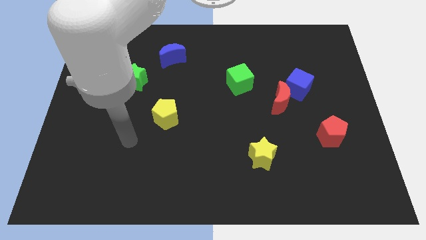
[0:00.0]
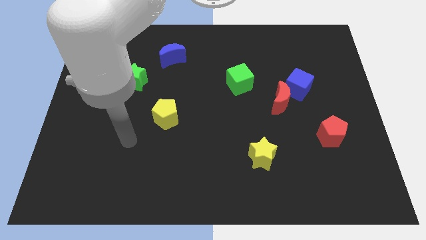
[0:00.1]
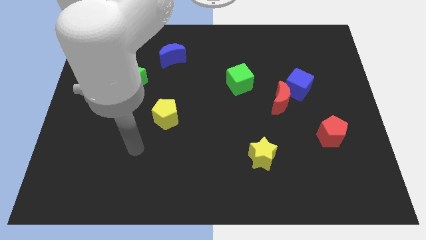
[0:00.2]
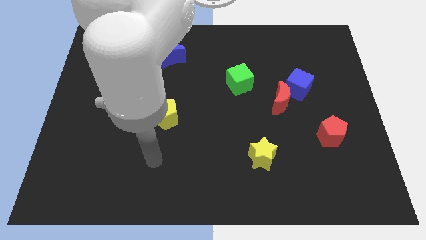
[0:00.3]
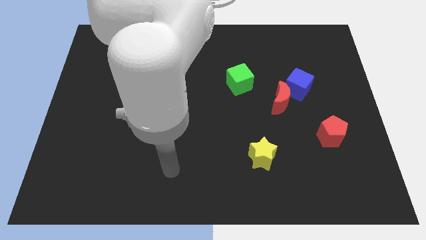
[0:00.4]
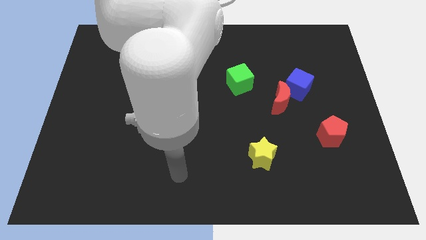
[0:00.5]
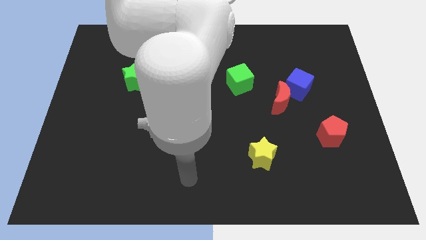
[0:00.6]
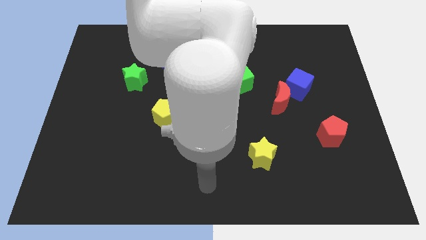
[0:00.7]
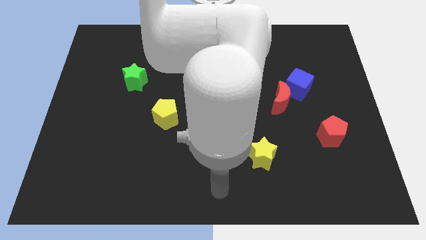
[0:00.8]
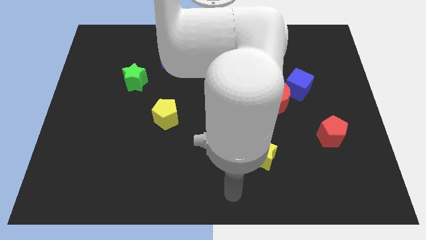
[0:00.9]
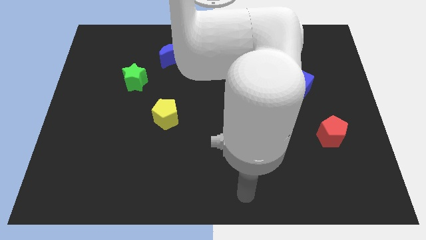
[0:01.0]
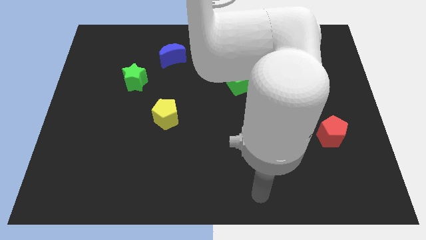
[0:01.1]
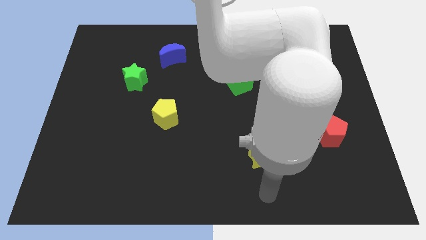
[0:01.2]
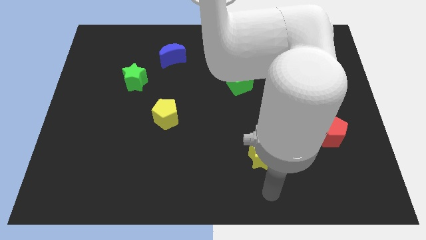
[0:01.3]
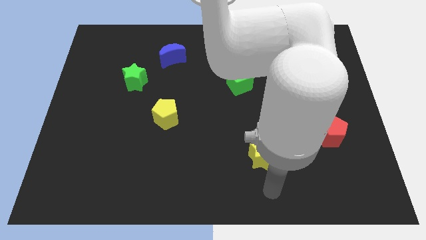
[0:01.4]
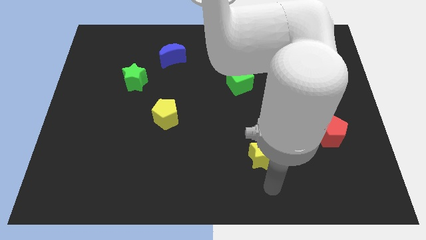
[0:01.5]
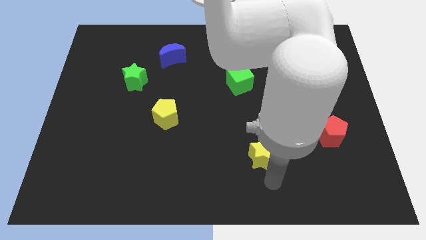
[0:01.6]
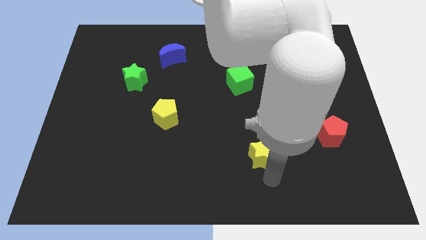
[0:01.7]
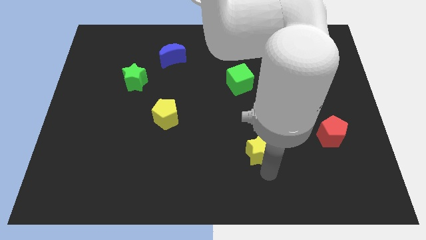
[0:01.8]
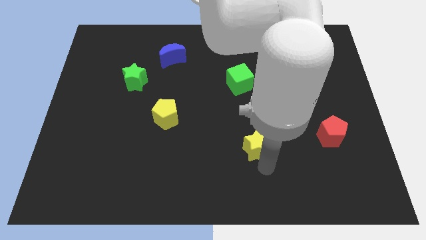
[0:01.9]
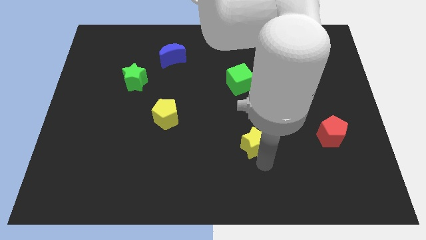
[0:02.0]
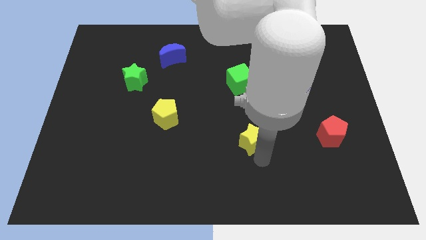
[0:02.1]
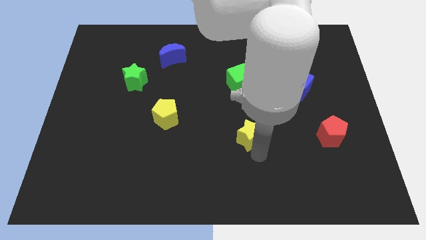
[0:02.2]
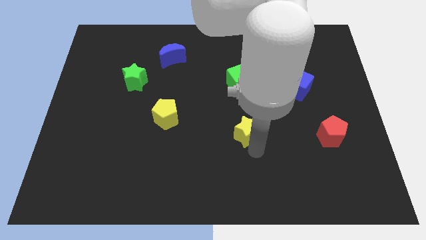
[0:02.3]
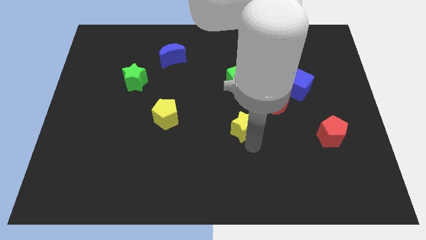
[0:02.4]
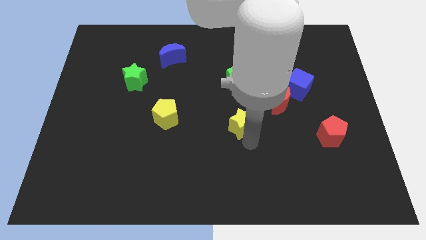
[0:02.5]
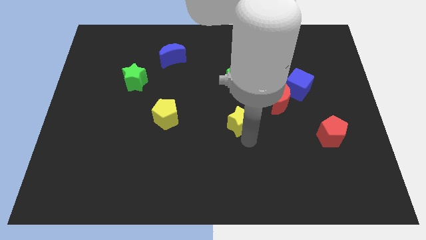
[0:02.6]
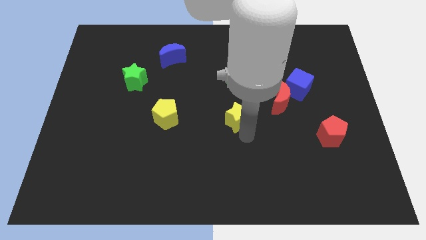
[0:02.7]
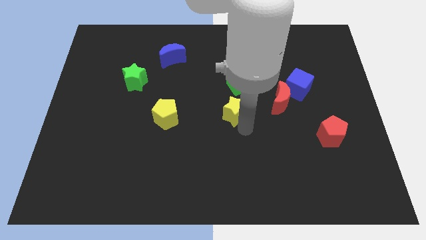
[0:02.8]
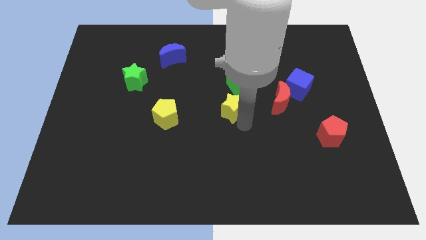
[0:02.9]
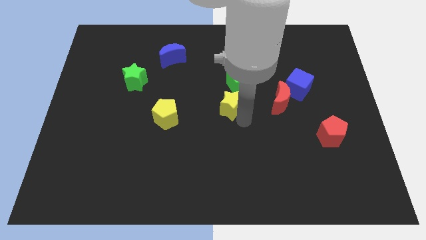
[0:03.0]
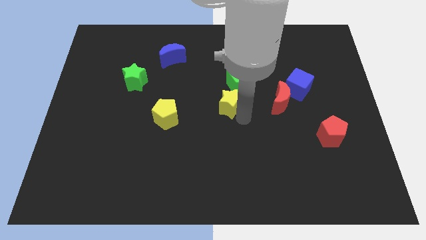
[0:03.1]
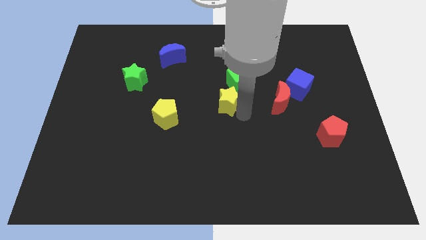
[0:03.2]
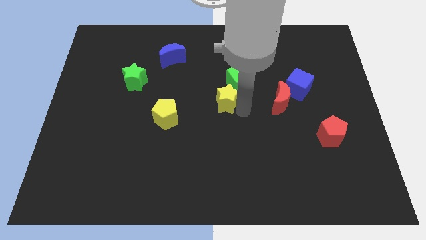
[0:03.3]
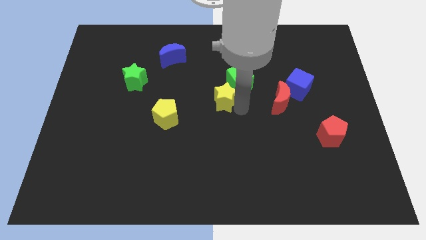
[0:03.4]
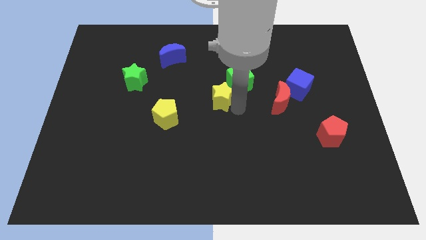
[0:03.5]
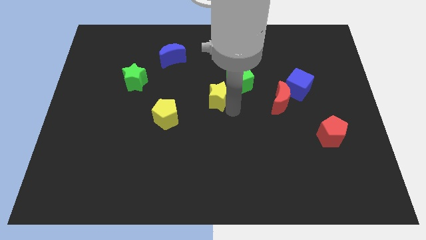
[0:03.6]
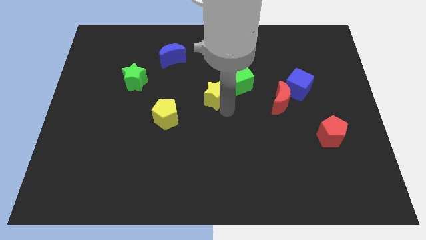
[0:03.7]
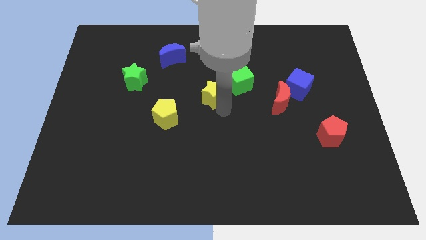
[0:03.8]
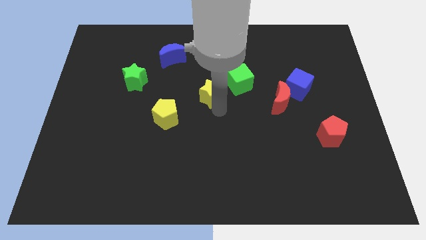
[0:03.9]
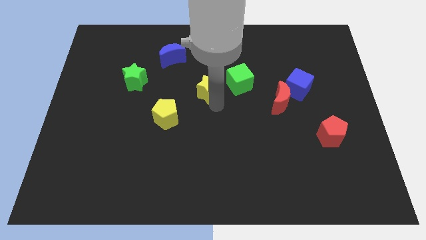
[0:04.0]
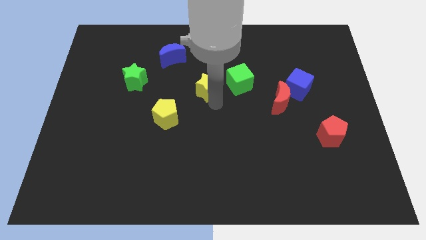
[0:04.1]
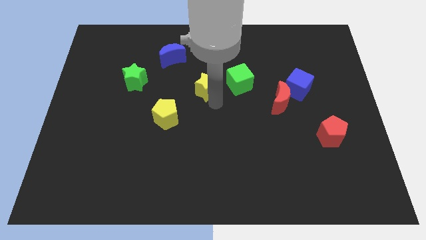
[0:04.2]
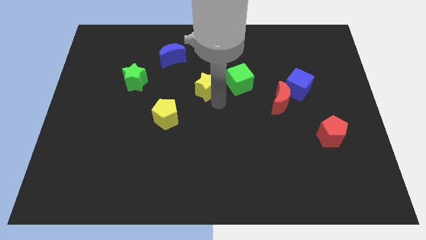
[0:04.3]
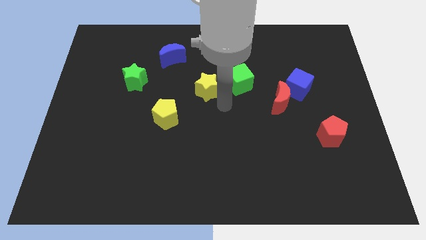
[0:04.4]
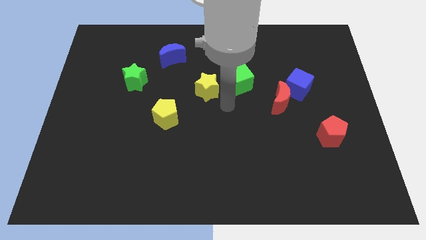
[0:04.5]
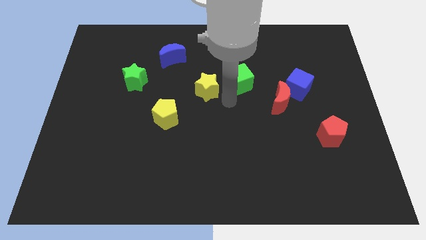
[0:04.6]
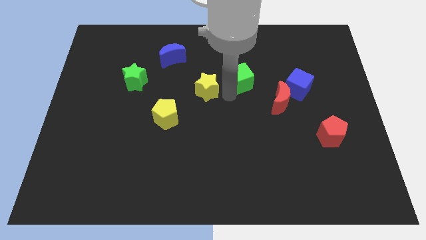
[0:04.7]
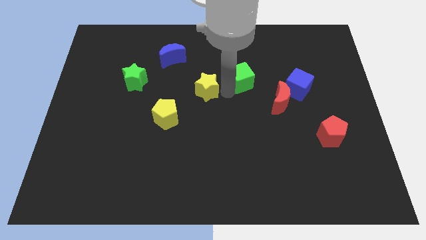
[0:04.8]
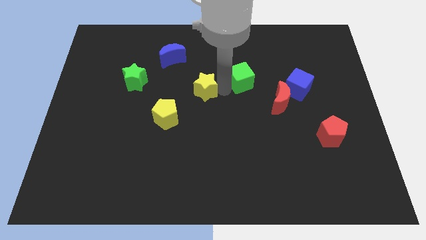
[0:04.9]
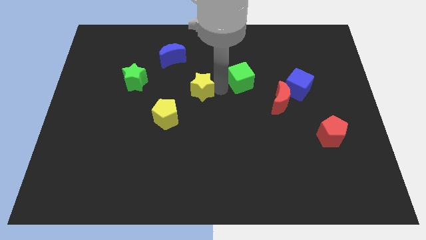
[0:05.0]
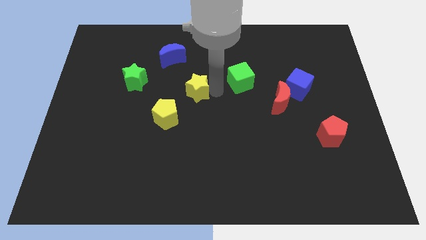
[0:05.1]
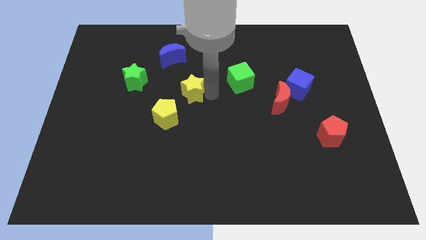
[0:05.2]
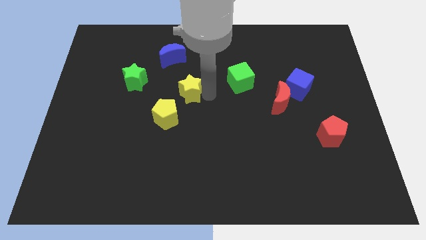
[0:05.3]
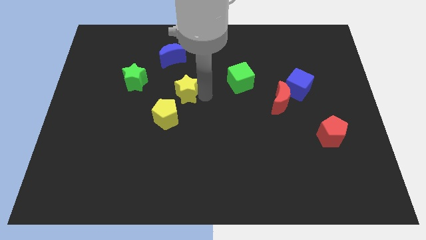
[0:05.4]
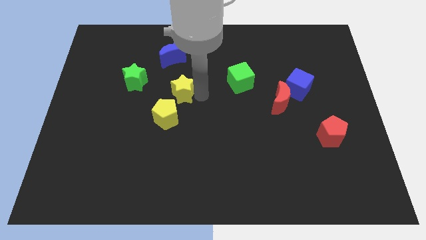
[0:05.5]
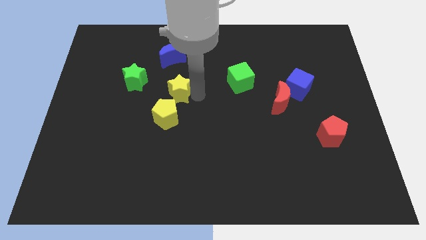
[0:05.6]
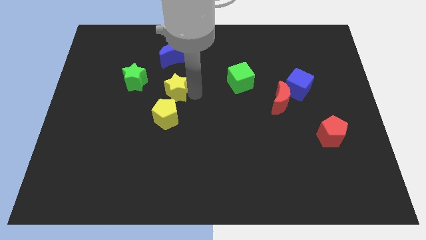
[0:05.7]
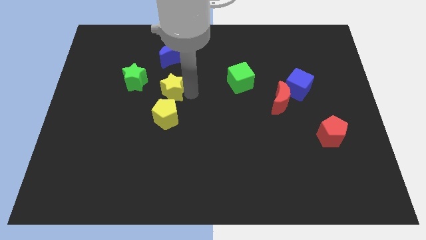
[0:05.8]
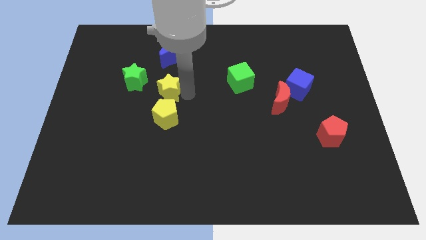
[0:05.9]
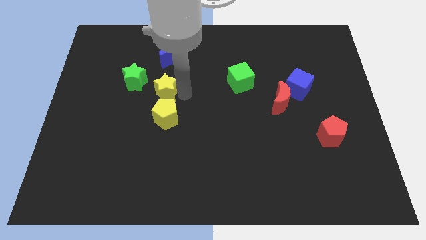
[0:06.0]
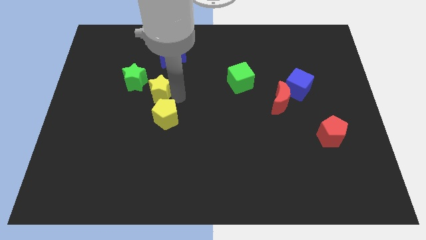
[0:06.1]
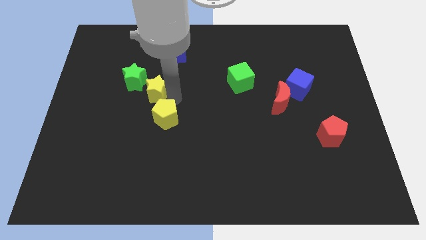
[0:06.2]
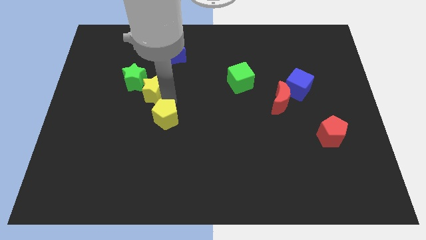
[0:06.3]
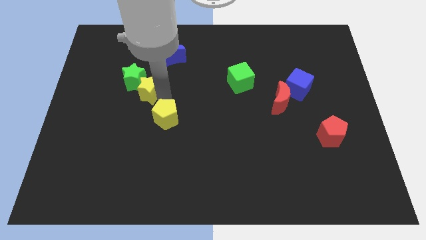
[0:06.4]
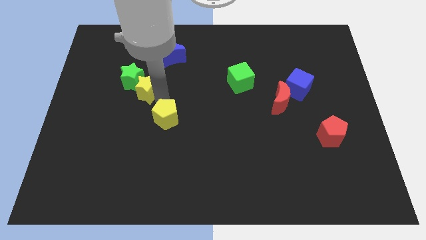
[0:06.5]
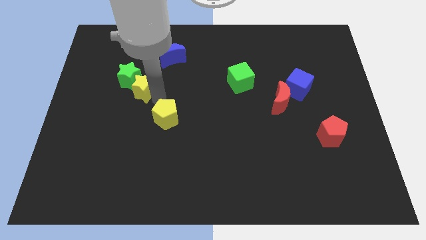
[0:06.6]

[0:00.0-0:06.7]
slide the yellow star close to the green star

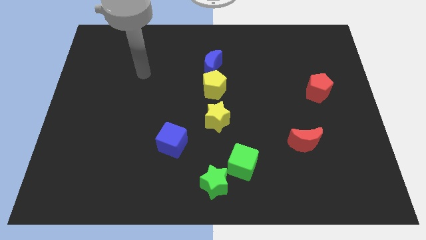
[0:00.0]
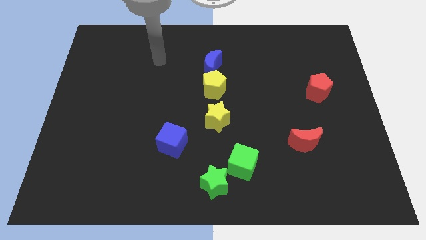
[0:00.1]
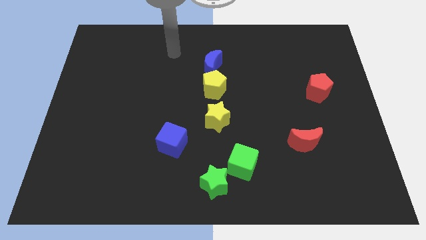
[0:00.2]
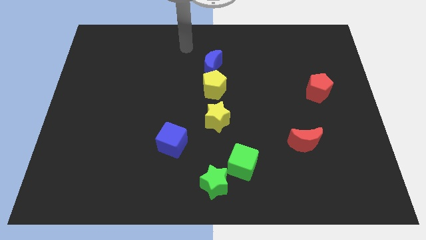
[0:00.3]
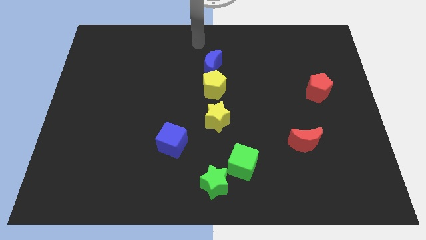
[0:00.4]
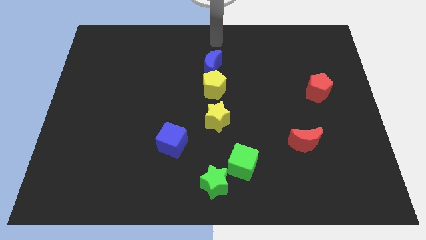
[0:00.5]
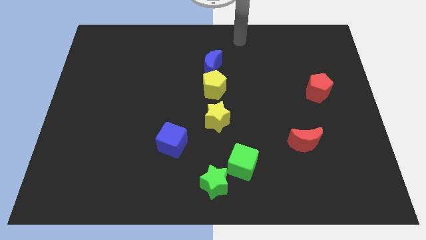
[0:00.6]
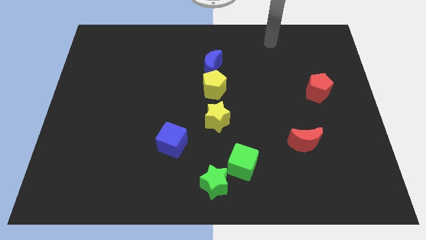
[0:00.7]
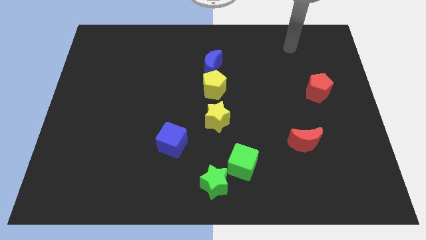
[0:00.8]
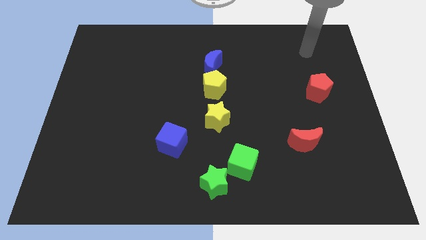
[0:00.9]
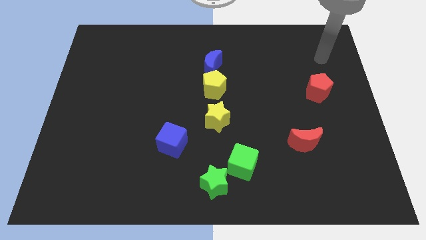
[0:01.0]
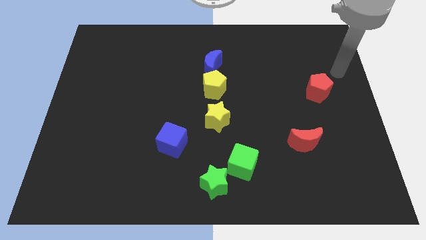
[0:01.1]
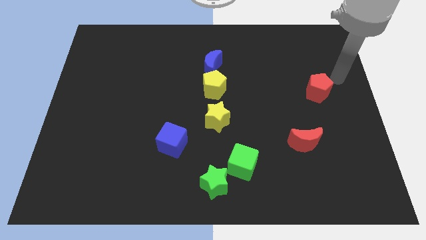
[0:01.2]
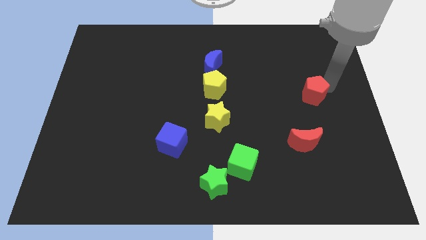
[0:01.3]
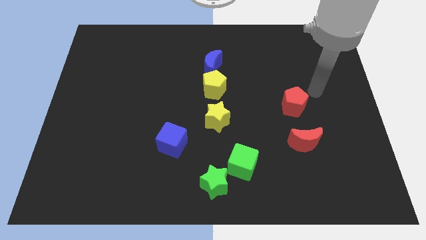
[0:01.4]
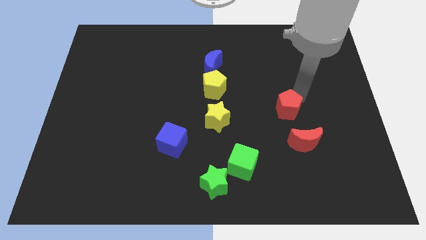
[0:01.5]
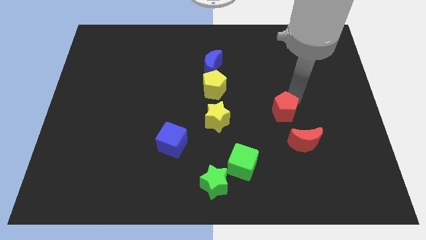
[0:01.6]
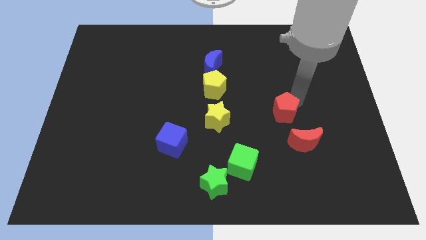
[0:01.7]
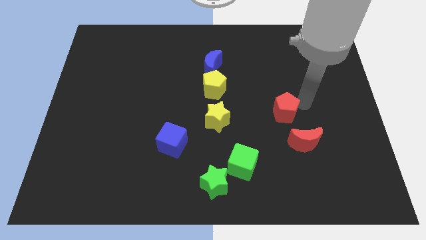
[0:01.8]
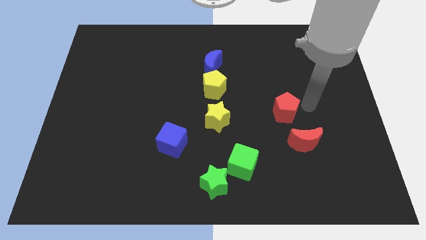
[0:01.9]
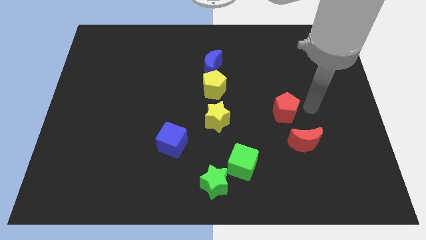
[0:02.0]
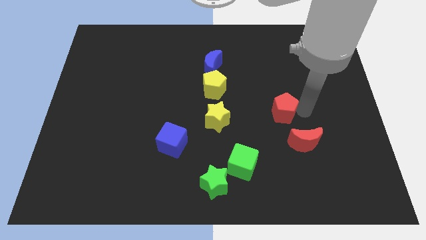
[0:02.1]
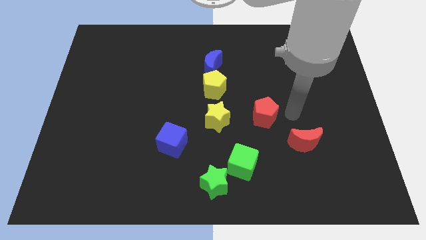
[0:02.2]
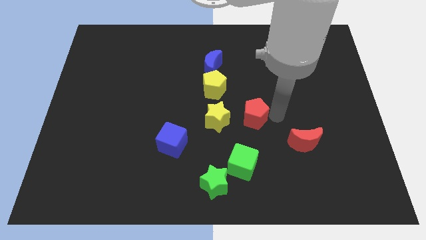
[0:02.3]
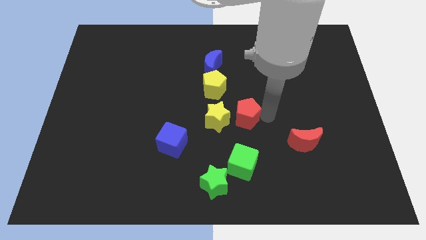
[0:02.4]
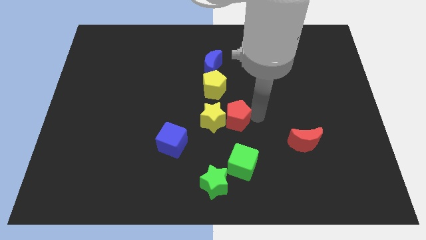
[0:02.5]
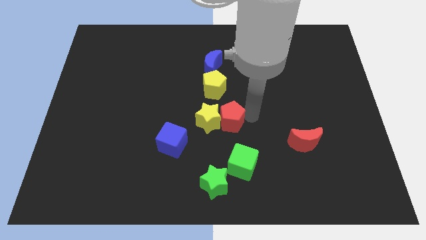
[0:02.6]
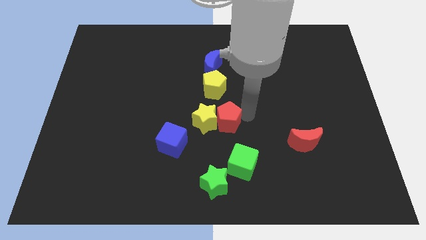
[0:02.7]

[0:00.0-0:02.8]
put the red pentagon next to the yellow star
